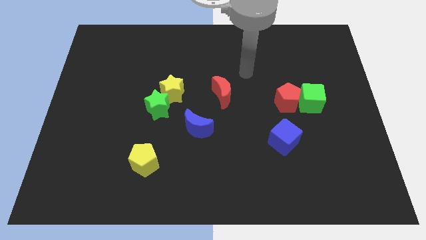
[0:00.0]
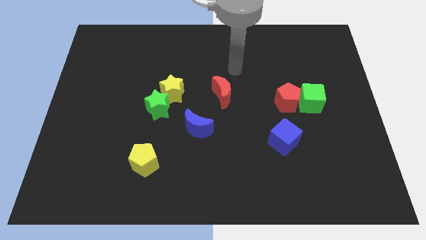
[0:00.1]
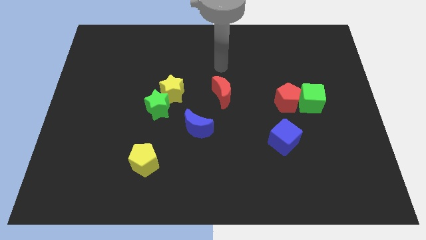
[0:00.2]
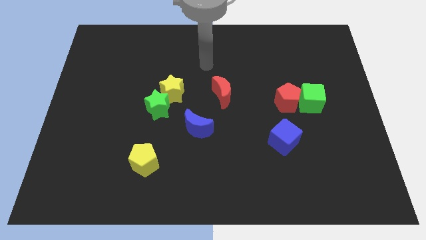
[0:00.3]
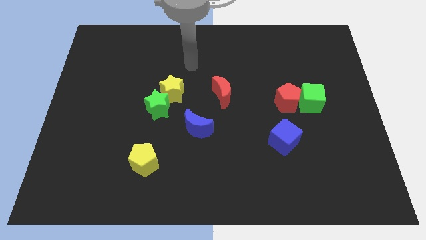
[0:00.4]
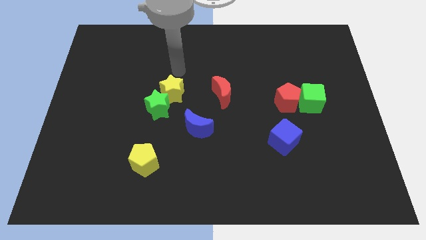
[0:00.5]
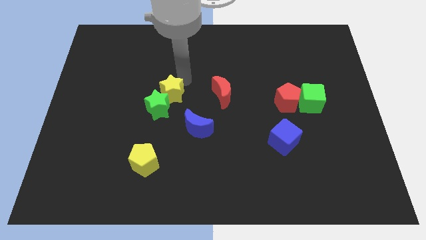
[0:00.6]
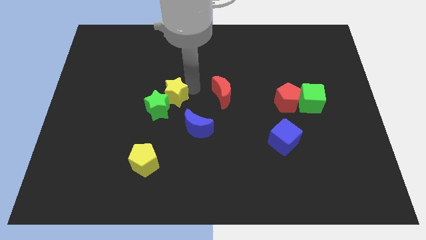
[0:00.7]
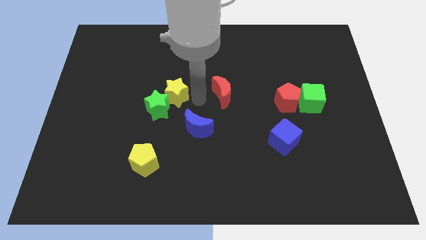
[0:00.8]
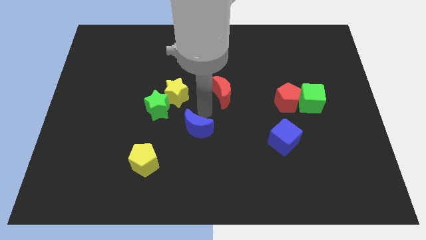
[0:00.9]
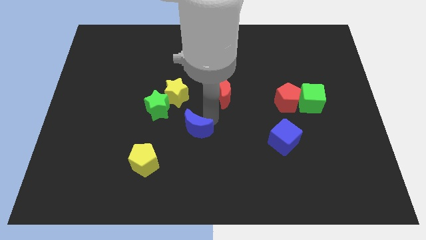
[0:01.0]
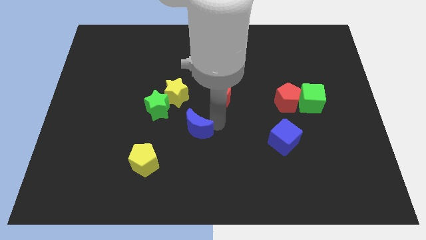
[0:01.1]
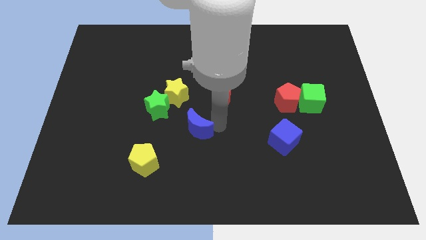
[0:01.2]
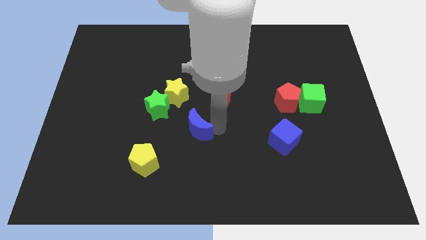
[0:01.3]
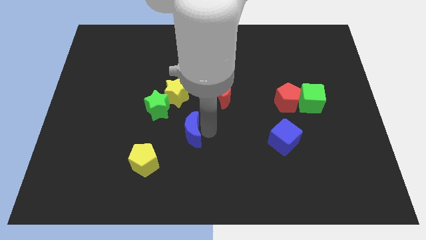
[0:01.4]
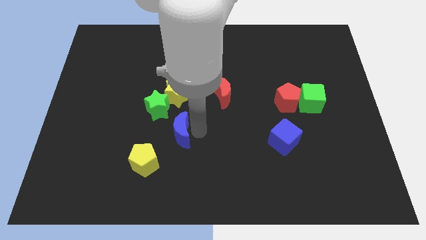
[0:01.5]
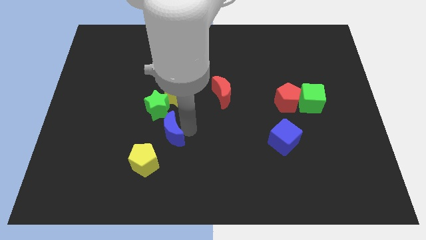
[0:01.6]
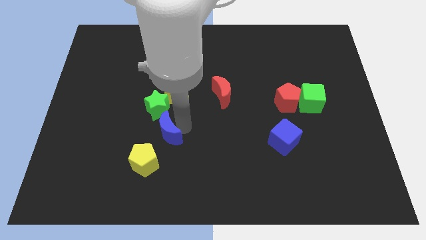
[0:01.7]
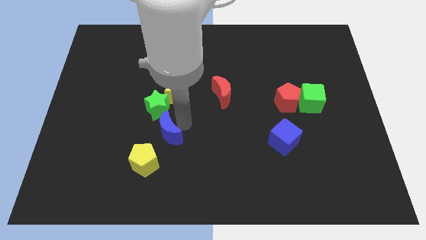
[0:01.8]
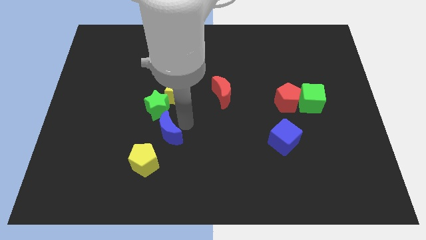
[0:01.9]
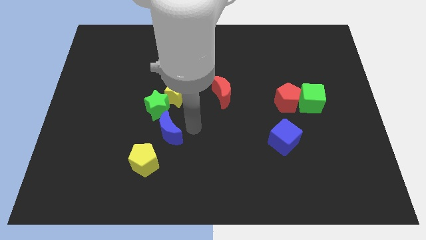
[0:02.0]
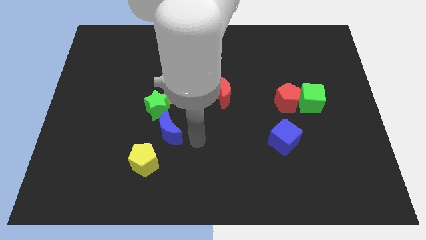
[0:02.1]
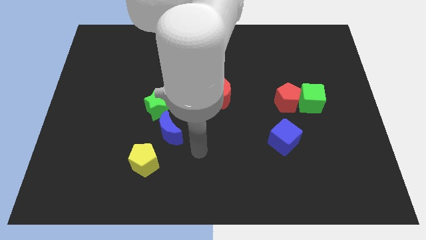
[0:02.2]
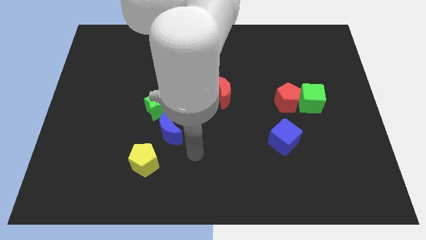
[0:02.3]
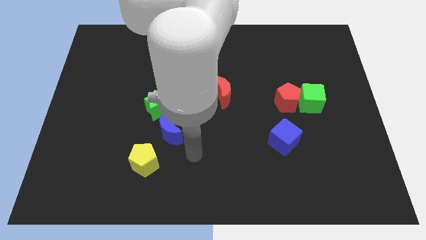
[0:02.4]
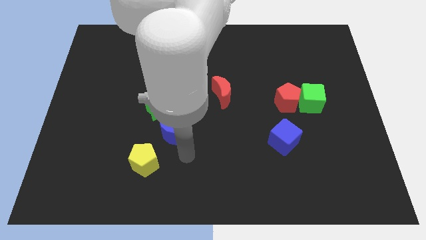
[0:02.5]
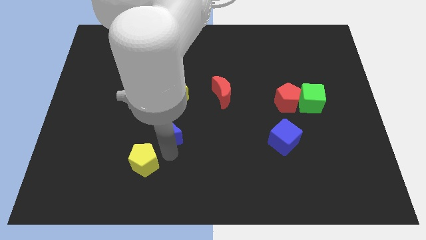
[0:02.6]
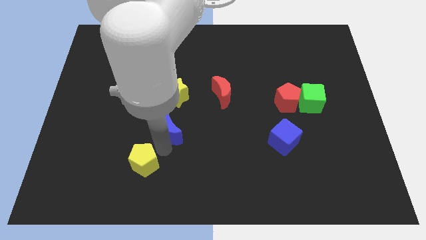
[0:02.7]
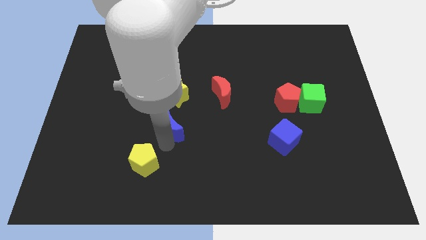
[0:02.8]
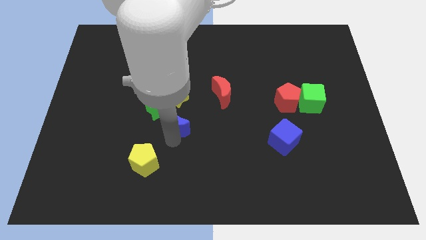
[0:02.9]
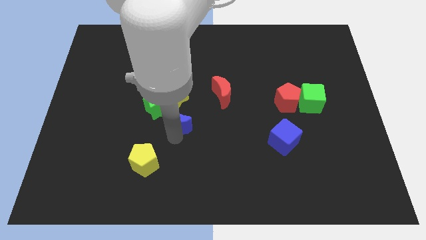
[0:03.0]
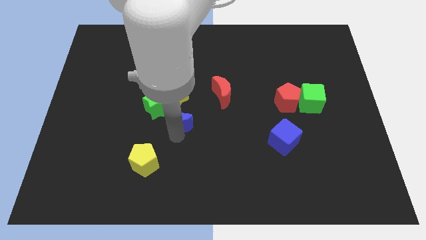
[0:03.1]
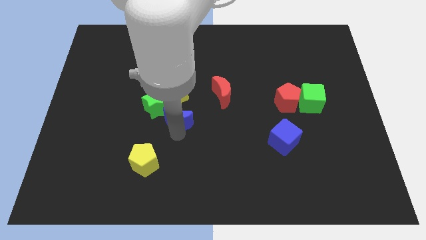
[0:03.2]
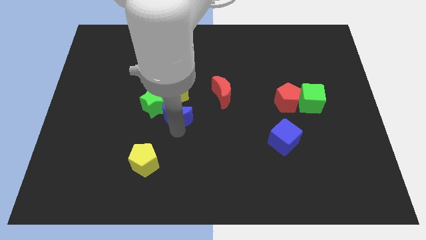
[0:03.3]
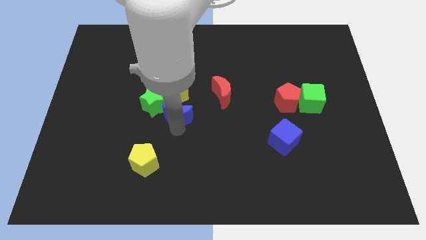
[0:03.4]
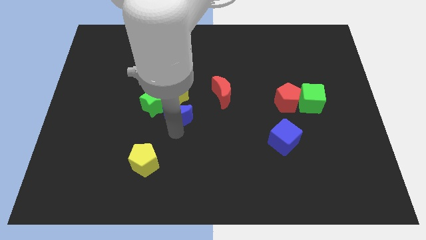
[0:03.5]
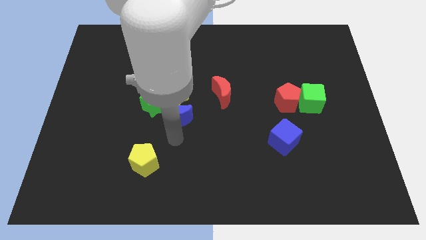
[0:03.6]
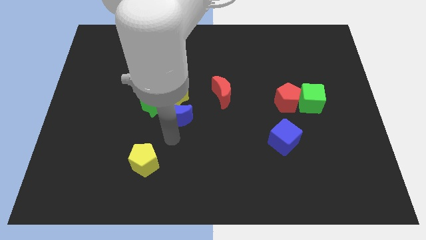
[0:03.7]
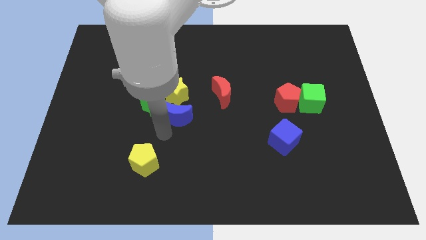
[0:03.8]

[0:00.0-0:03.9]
move the blue moon slightly

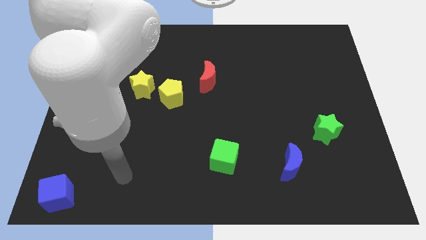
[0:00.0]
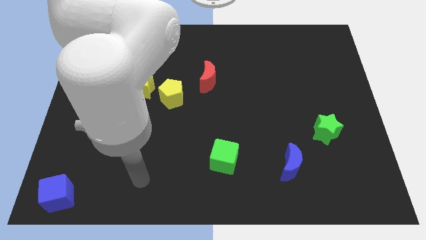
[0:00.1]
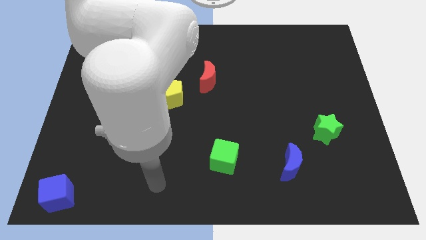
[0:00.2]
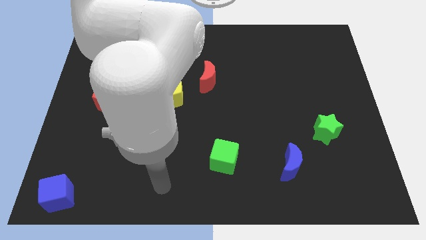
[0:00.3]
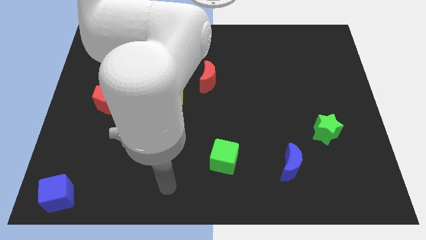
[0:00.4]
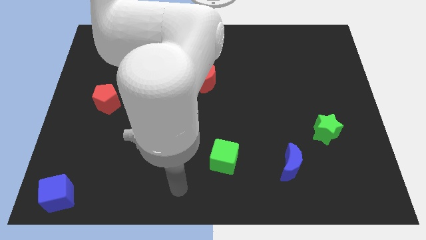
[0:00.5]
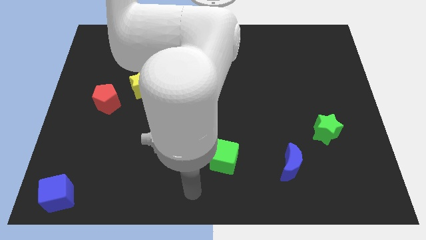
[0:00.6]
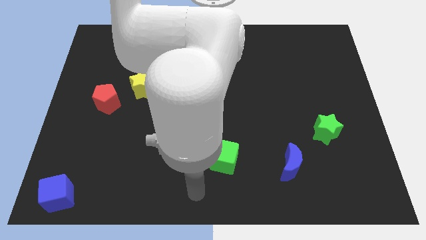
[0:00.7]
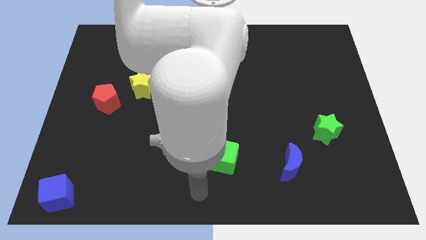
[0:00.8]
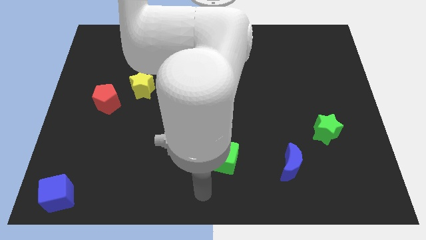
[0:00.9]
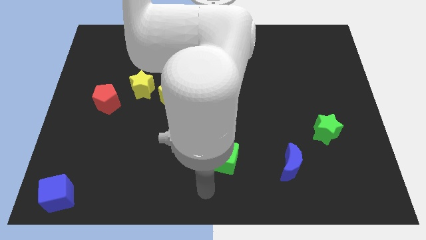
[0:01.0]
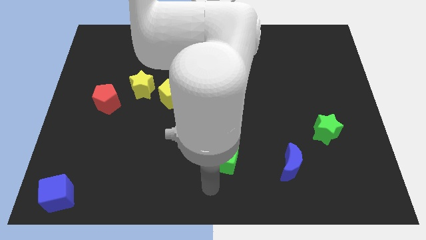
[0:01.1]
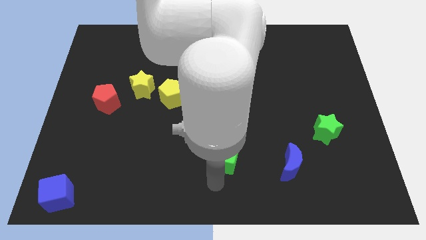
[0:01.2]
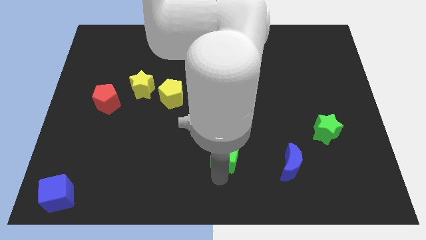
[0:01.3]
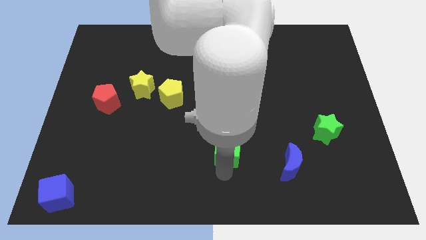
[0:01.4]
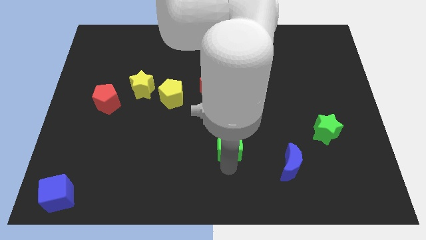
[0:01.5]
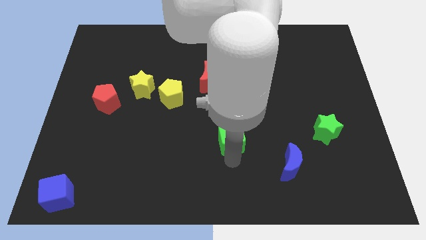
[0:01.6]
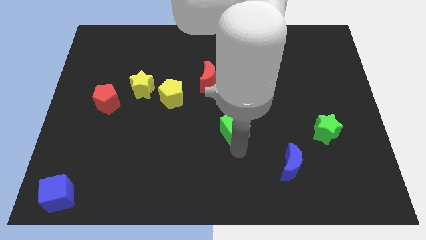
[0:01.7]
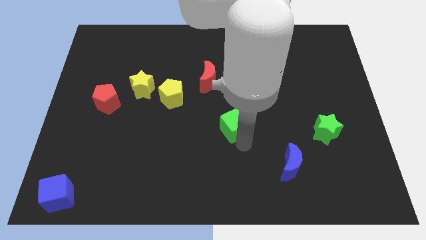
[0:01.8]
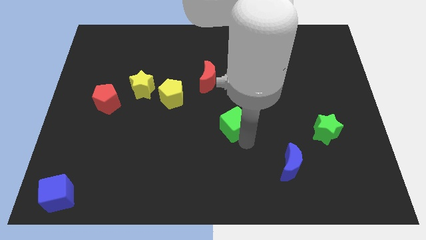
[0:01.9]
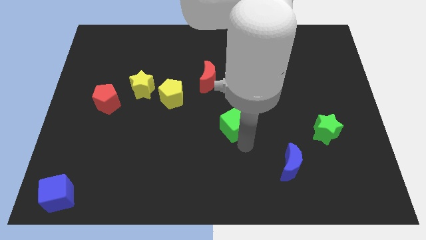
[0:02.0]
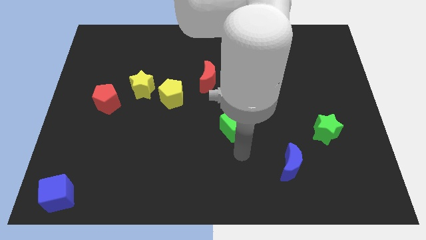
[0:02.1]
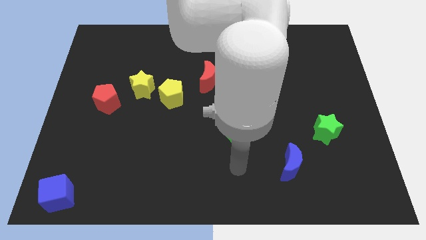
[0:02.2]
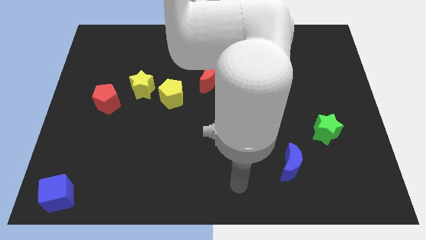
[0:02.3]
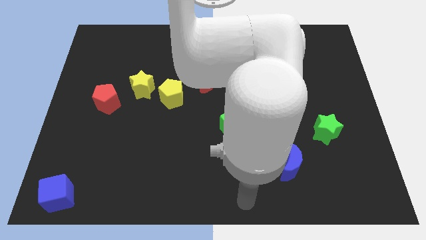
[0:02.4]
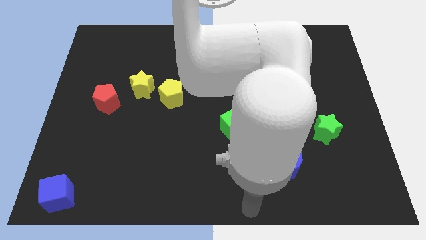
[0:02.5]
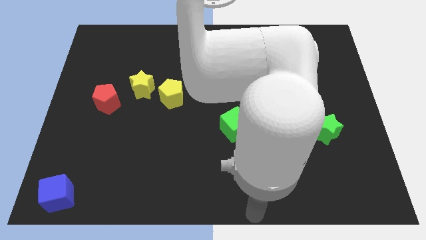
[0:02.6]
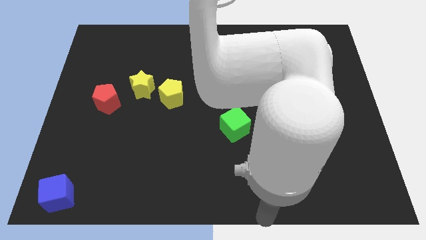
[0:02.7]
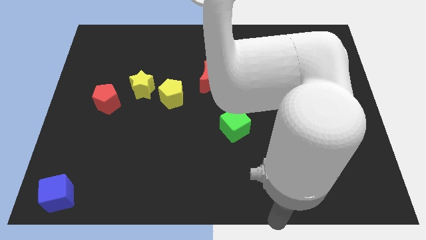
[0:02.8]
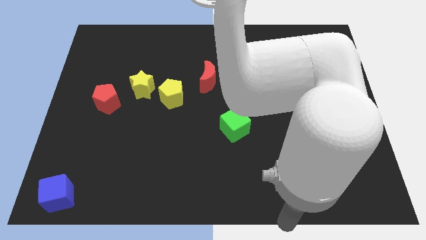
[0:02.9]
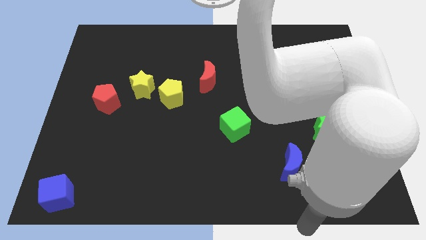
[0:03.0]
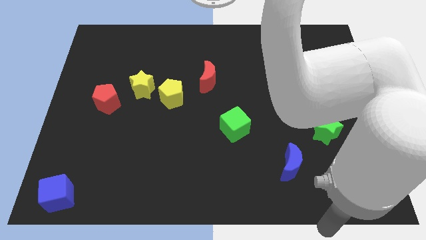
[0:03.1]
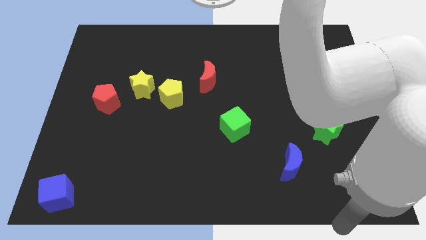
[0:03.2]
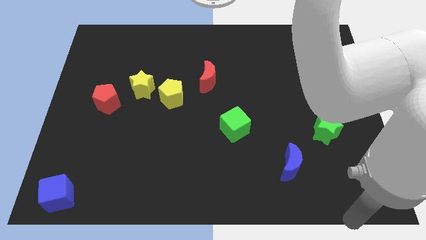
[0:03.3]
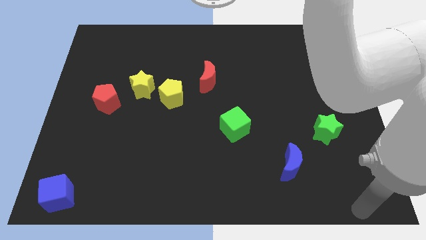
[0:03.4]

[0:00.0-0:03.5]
move the green cube slightly up

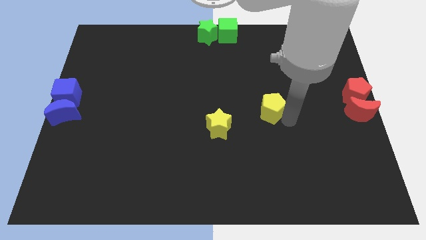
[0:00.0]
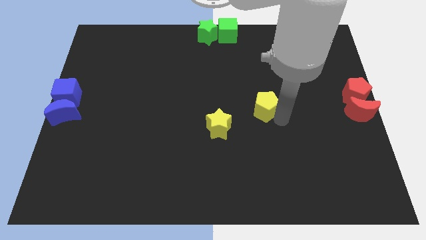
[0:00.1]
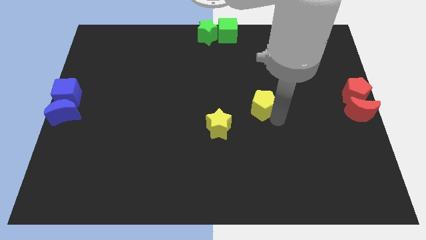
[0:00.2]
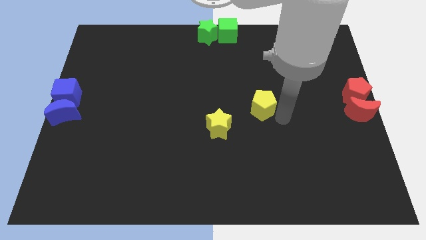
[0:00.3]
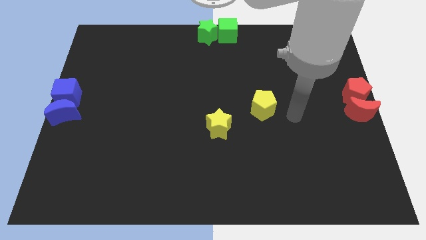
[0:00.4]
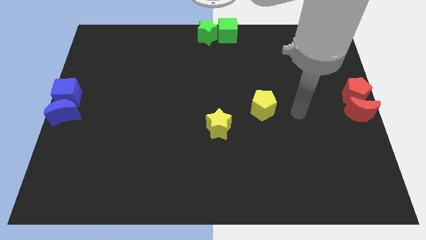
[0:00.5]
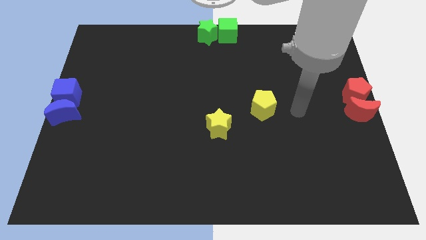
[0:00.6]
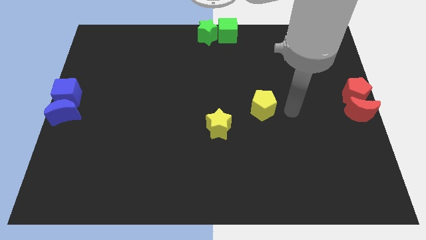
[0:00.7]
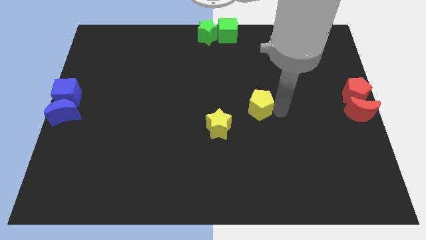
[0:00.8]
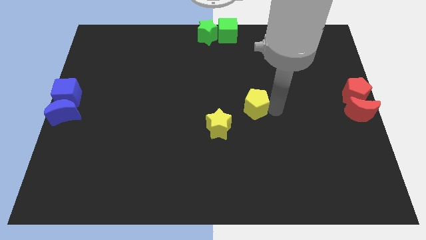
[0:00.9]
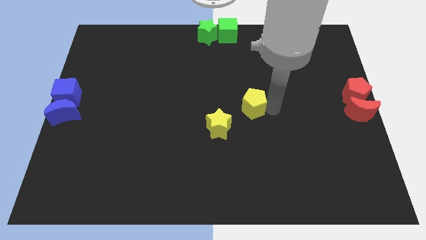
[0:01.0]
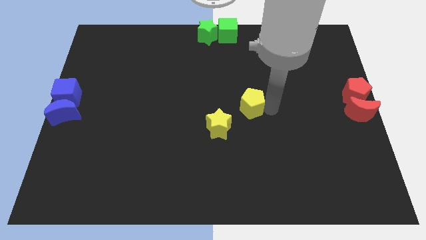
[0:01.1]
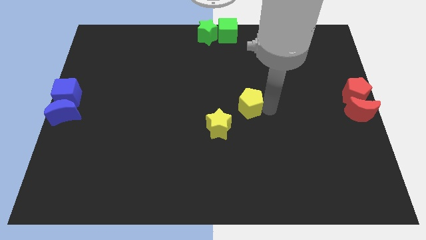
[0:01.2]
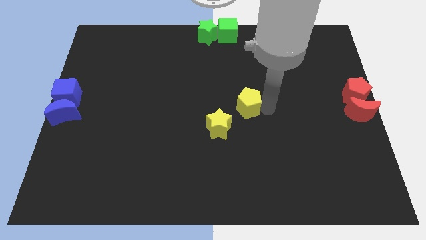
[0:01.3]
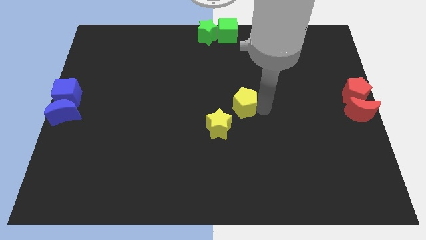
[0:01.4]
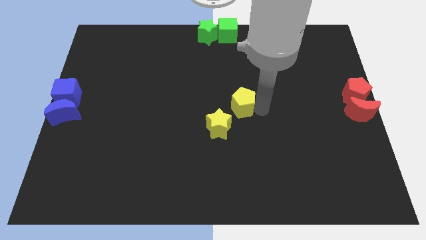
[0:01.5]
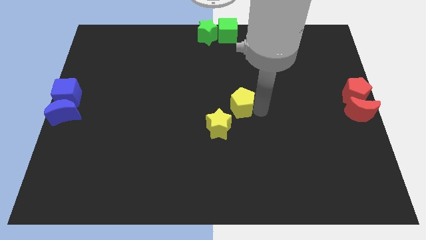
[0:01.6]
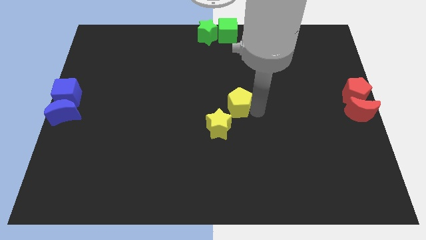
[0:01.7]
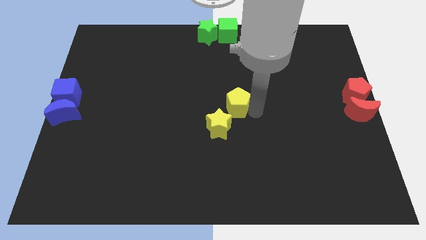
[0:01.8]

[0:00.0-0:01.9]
drag yellow pentagon near yellow star
